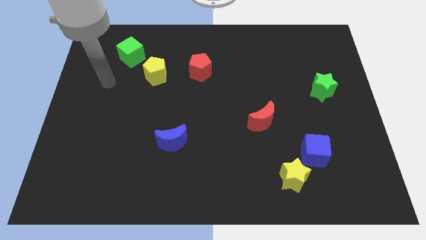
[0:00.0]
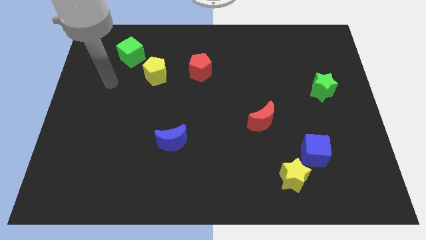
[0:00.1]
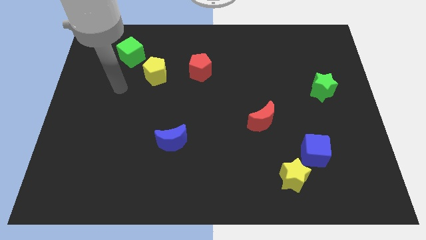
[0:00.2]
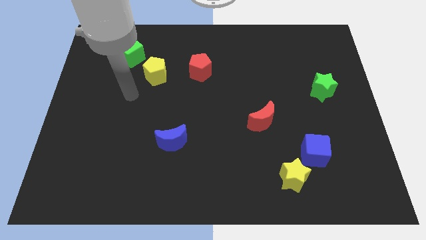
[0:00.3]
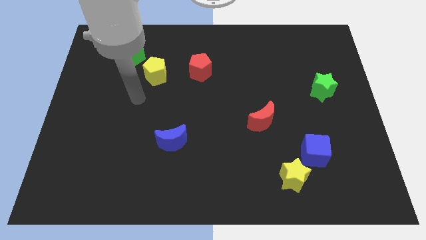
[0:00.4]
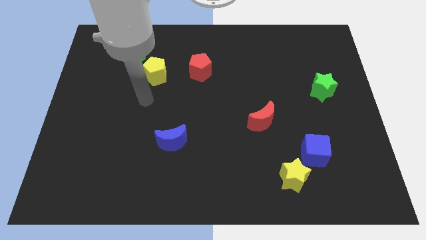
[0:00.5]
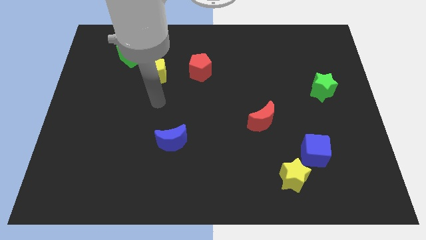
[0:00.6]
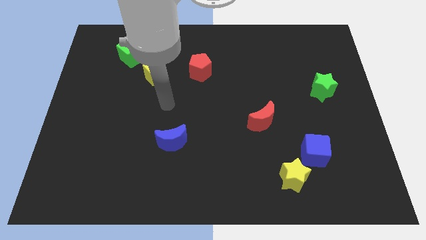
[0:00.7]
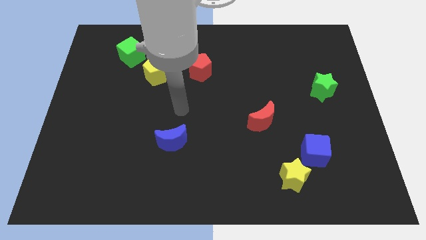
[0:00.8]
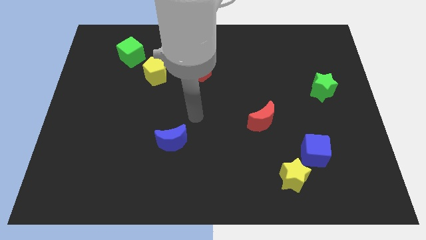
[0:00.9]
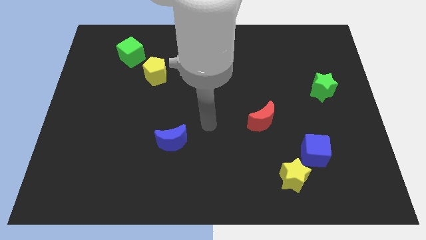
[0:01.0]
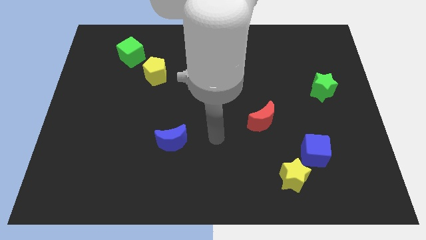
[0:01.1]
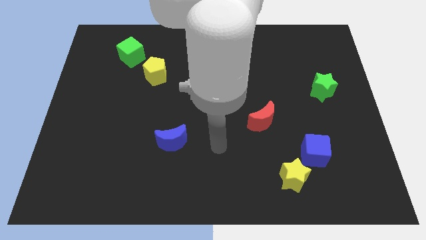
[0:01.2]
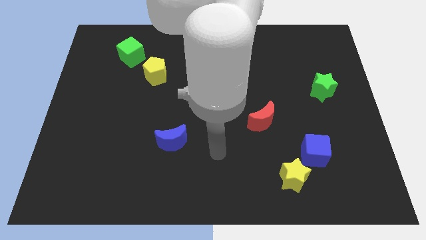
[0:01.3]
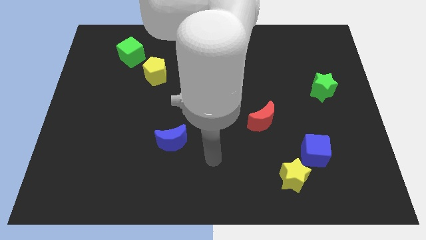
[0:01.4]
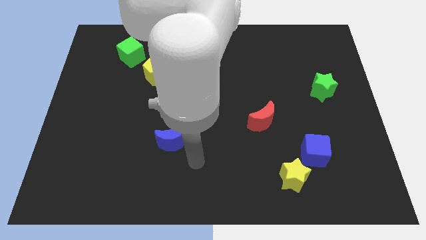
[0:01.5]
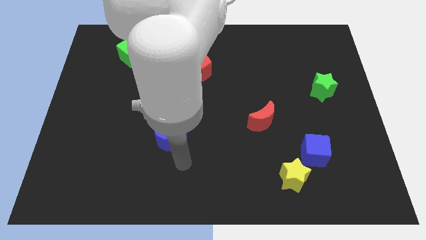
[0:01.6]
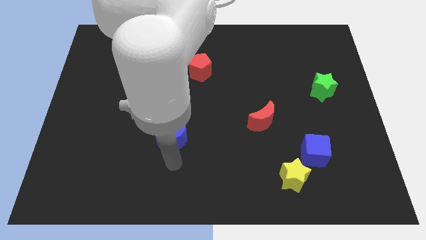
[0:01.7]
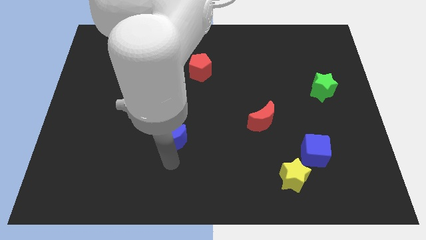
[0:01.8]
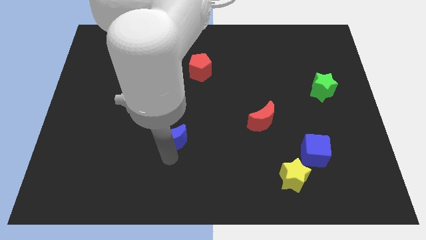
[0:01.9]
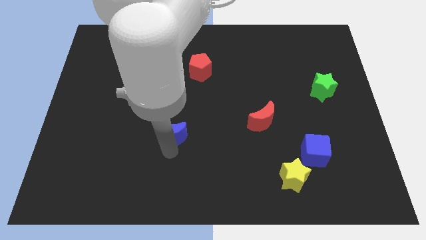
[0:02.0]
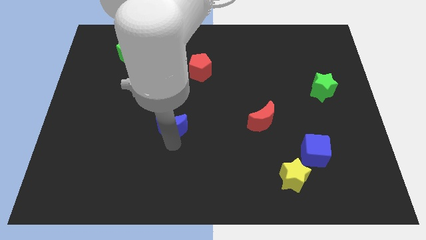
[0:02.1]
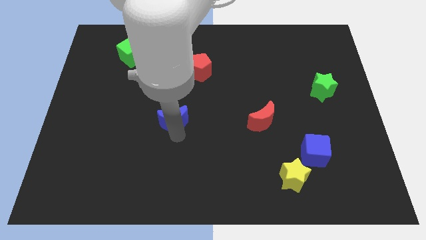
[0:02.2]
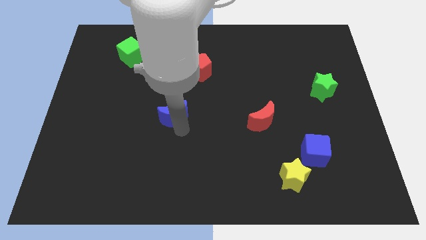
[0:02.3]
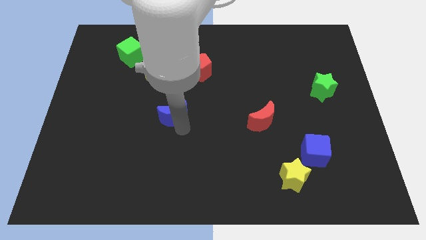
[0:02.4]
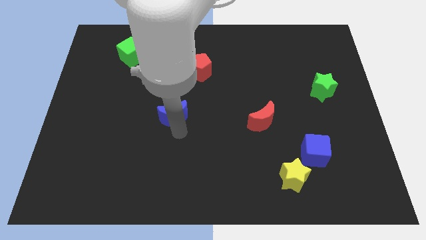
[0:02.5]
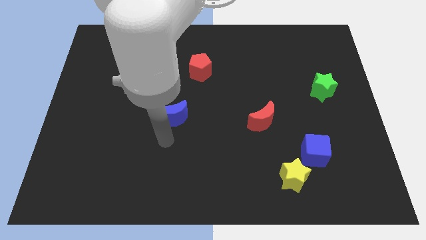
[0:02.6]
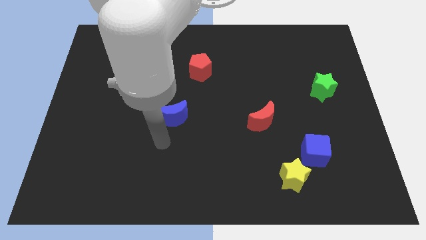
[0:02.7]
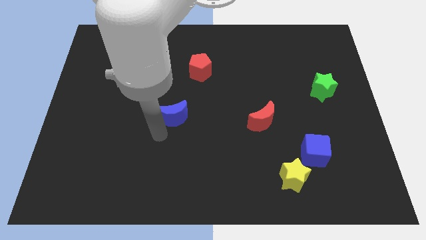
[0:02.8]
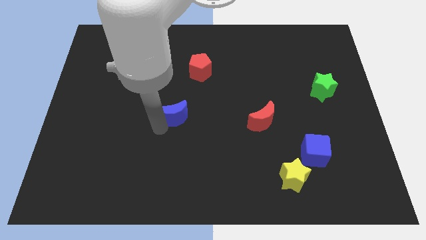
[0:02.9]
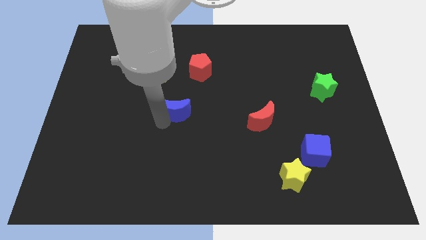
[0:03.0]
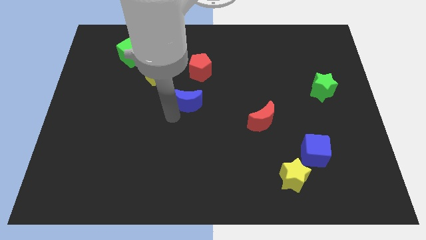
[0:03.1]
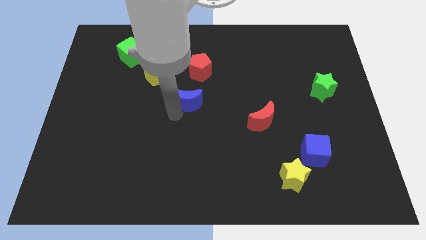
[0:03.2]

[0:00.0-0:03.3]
place the blue moon to the bottom side of the red pentagon

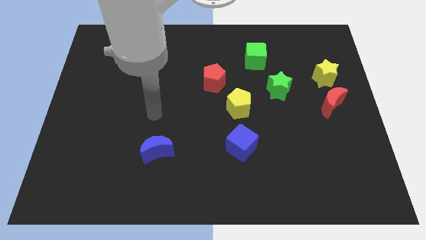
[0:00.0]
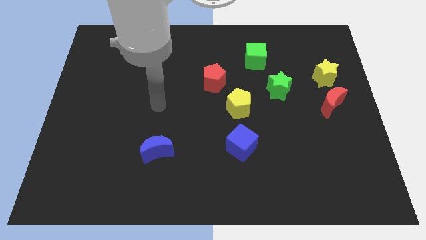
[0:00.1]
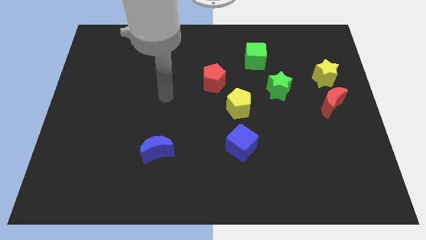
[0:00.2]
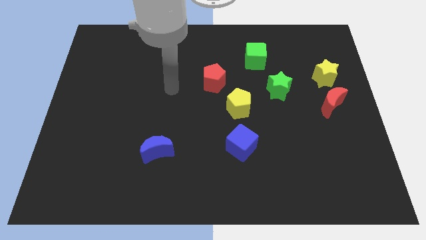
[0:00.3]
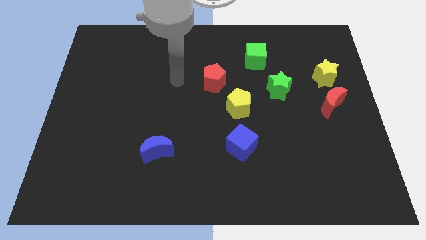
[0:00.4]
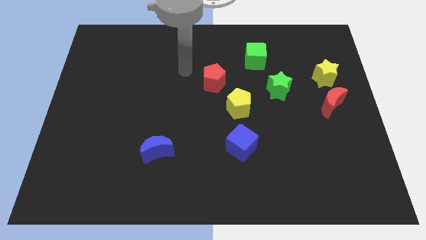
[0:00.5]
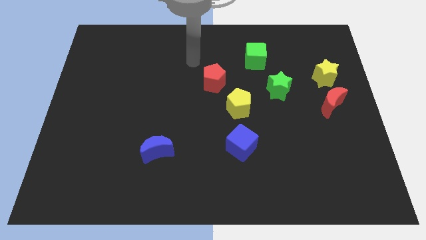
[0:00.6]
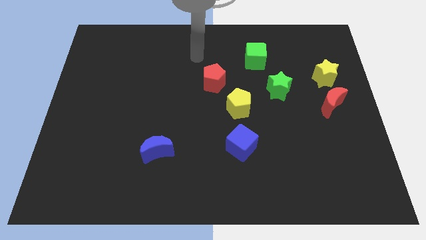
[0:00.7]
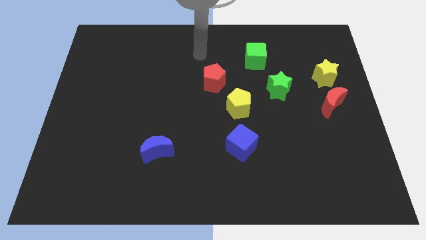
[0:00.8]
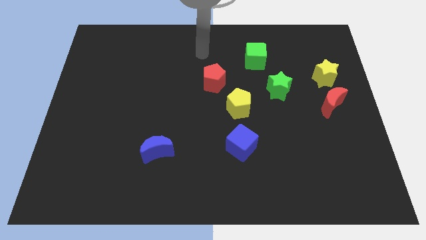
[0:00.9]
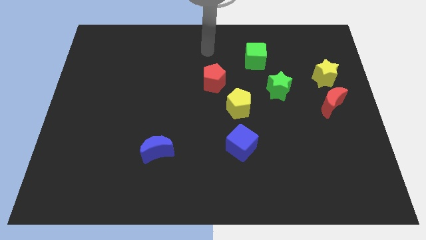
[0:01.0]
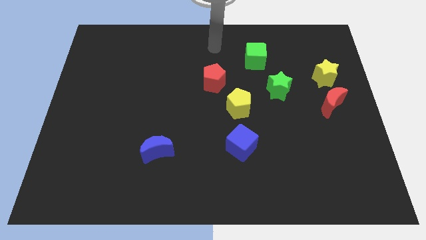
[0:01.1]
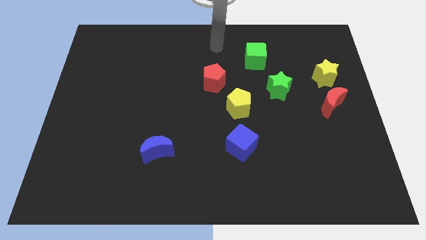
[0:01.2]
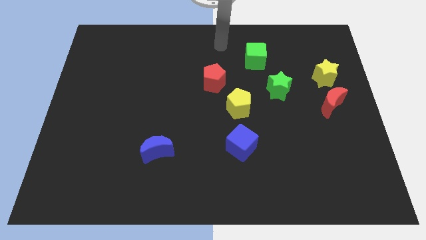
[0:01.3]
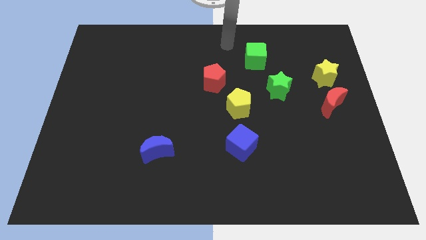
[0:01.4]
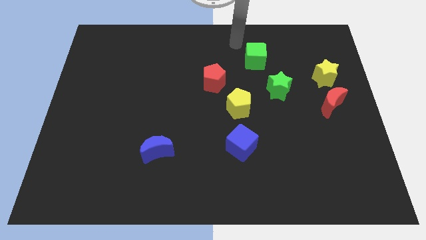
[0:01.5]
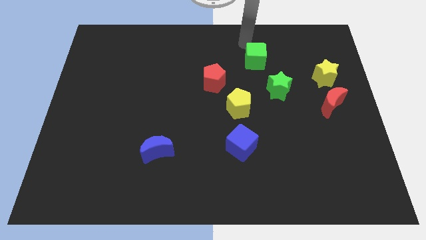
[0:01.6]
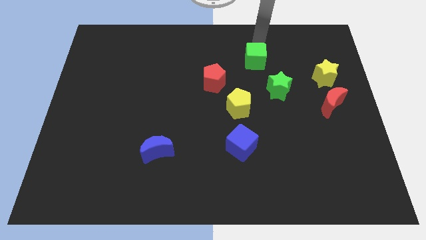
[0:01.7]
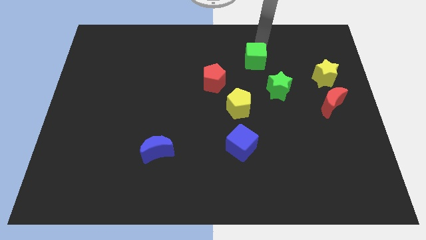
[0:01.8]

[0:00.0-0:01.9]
point your arm on top of green cube

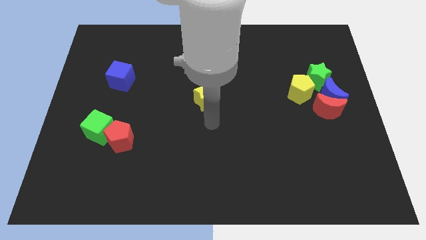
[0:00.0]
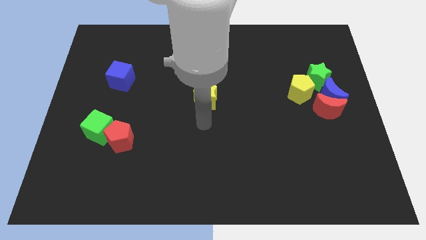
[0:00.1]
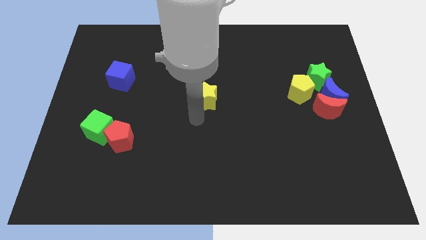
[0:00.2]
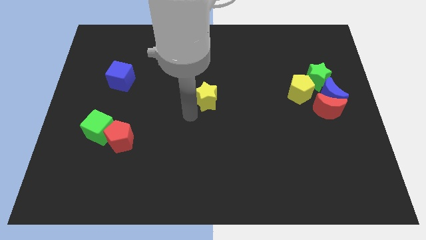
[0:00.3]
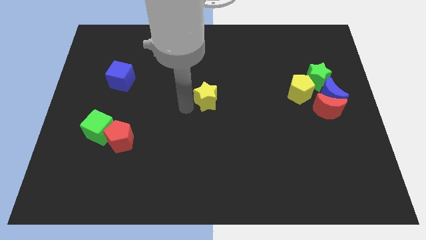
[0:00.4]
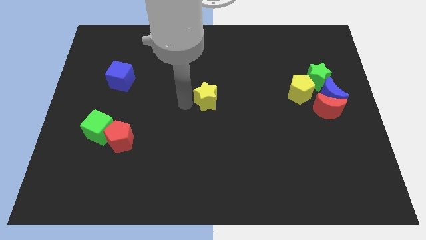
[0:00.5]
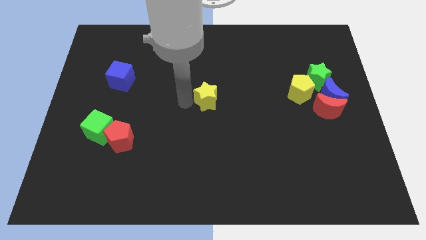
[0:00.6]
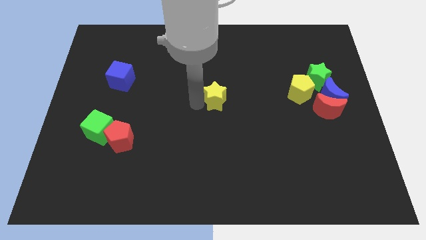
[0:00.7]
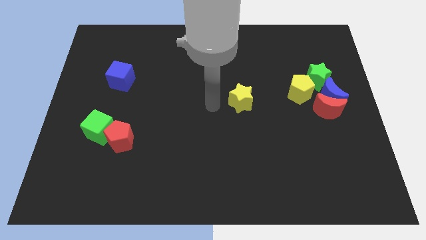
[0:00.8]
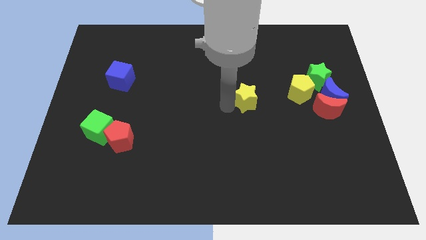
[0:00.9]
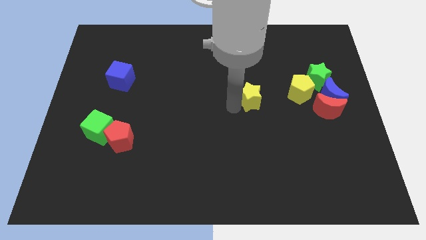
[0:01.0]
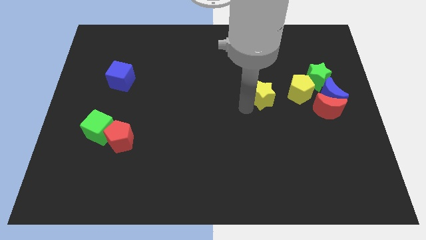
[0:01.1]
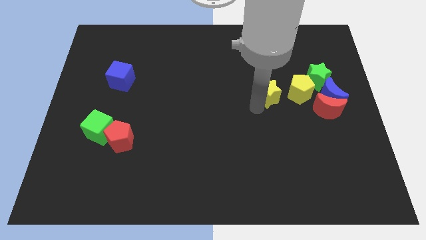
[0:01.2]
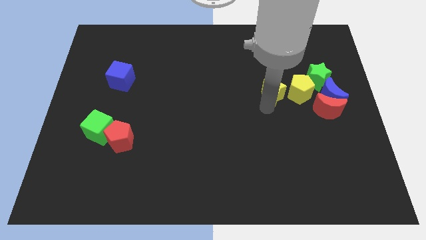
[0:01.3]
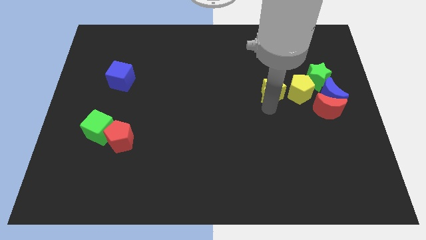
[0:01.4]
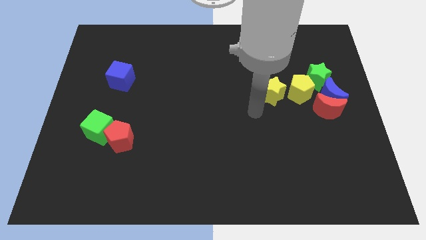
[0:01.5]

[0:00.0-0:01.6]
push the yellow star towards the yellow pentagon

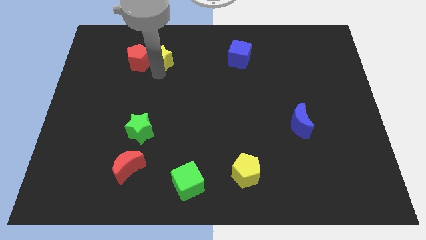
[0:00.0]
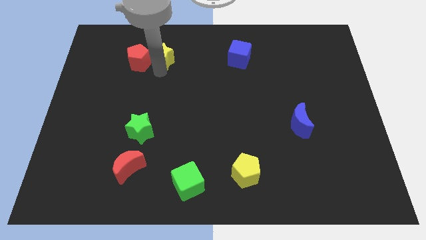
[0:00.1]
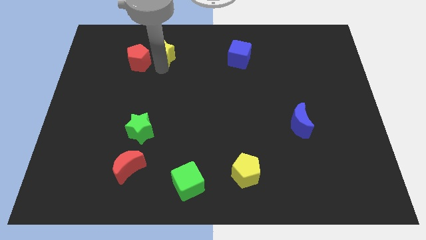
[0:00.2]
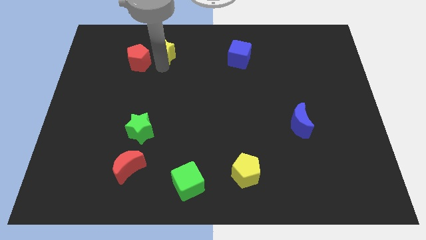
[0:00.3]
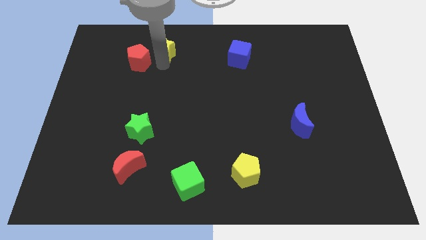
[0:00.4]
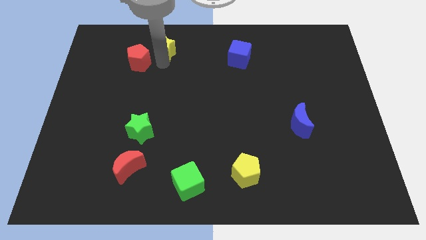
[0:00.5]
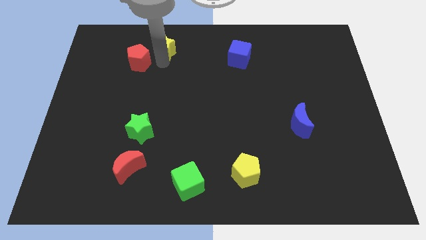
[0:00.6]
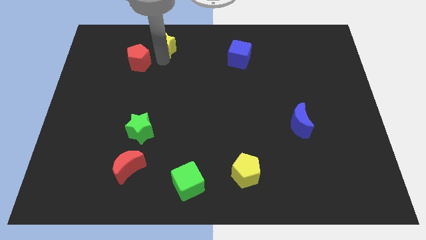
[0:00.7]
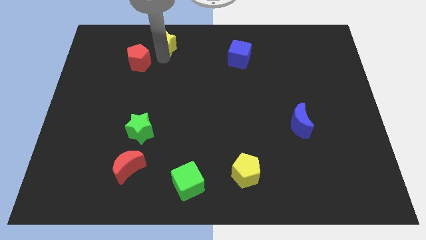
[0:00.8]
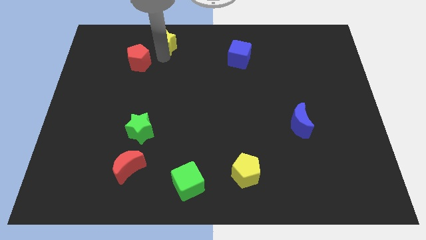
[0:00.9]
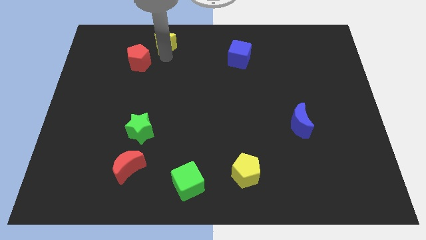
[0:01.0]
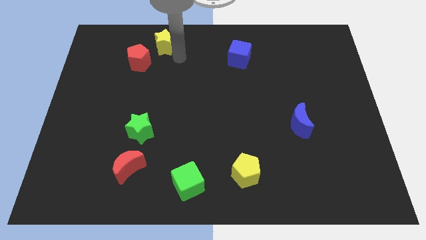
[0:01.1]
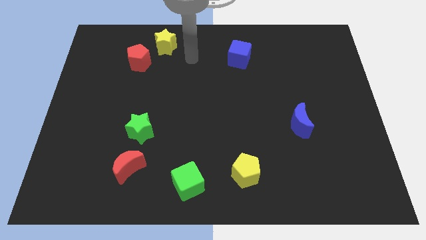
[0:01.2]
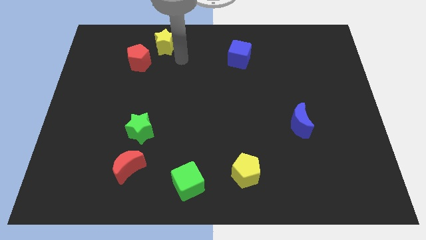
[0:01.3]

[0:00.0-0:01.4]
separate the yellow star from red pentagon

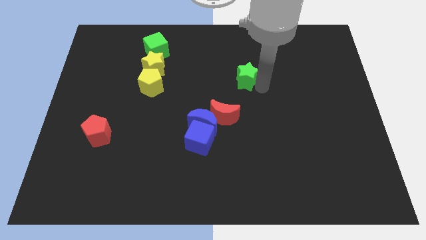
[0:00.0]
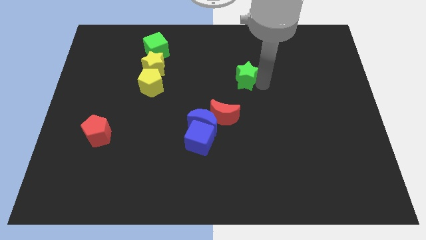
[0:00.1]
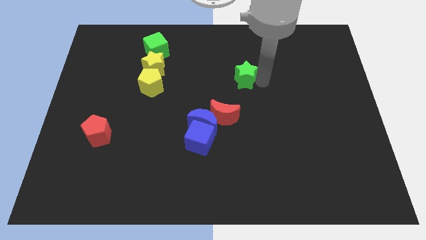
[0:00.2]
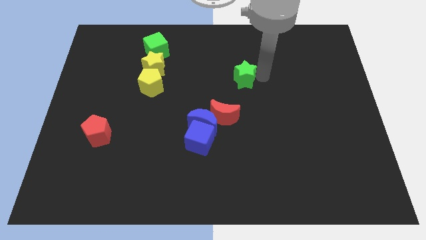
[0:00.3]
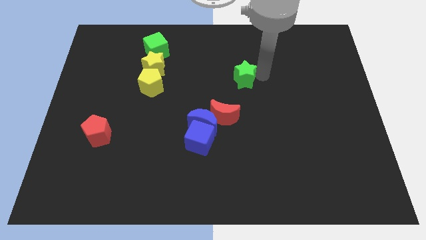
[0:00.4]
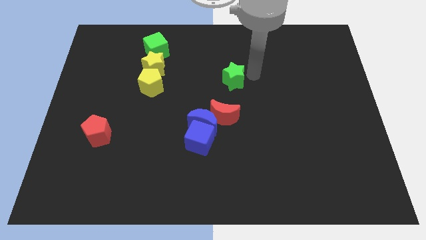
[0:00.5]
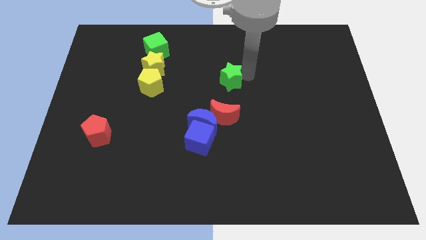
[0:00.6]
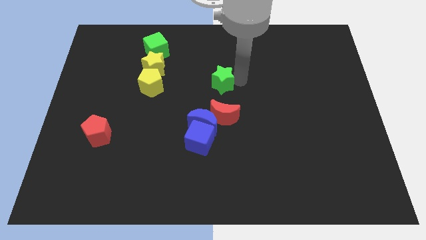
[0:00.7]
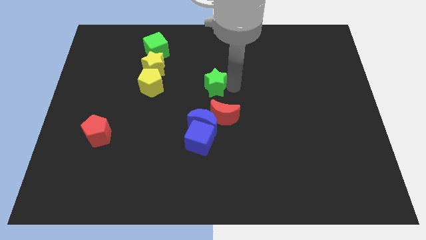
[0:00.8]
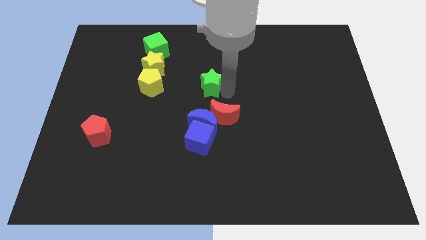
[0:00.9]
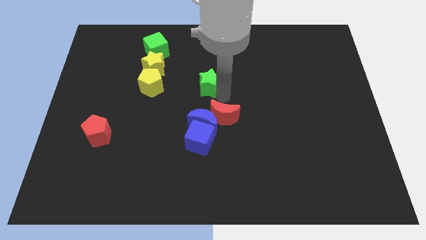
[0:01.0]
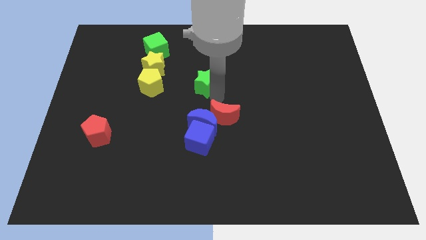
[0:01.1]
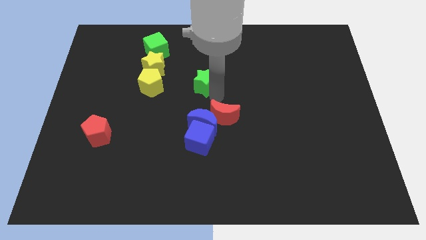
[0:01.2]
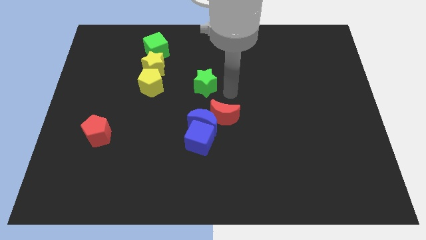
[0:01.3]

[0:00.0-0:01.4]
slide the green star slightly to the left
